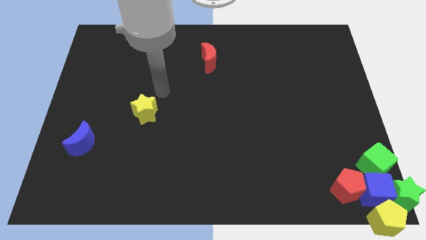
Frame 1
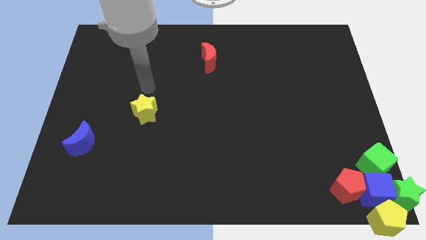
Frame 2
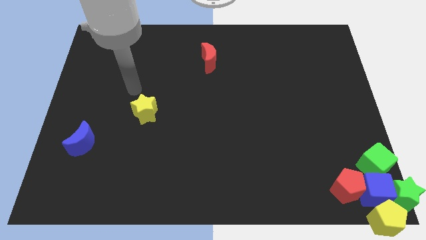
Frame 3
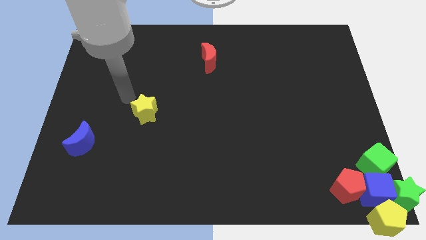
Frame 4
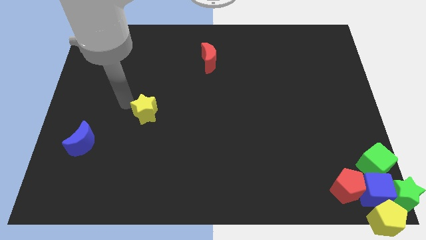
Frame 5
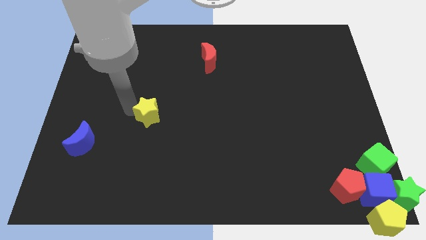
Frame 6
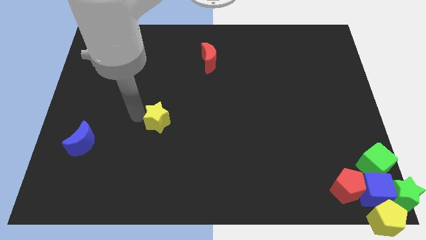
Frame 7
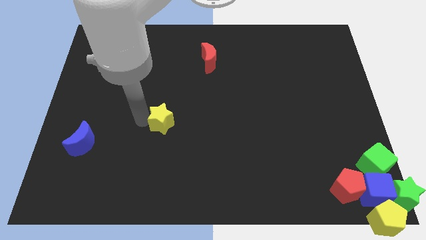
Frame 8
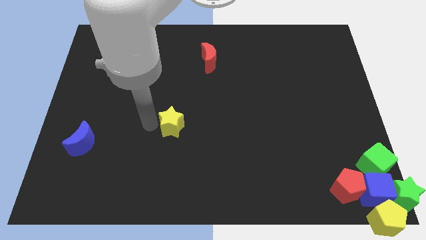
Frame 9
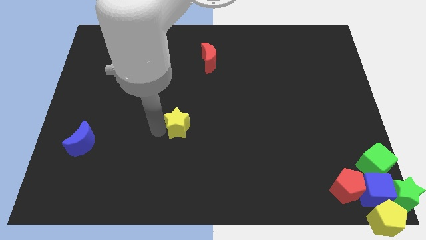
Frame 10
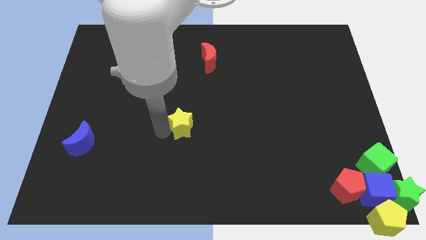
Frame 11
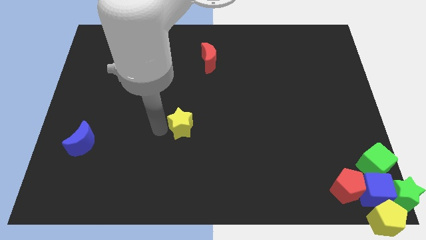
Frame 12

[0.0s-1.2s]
move the yellow star to the right of the board

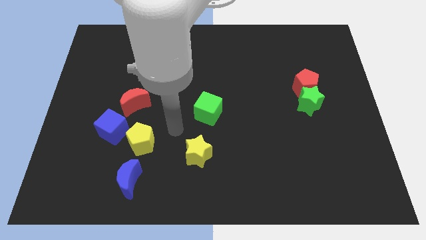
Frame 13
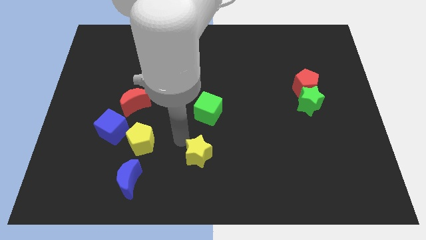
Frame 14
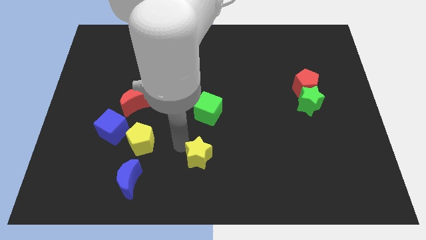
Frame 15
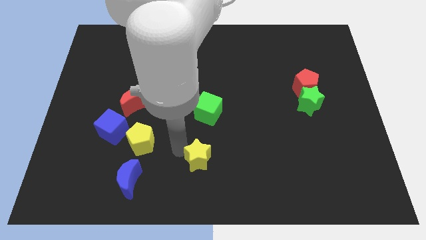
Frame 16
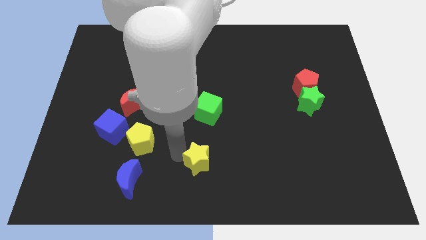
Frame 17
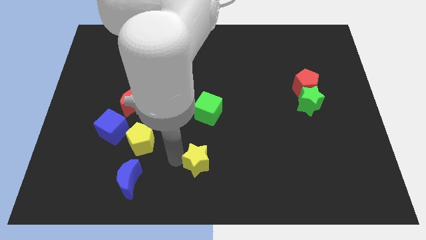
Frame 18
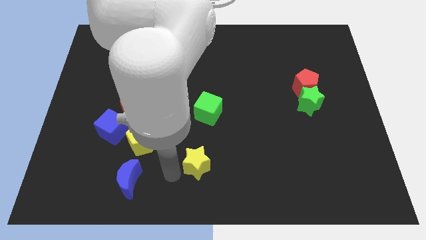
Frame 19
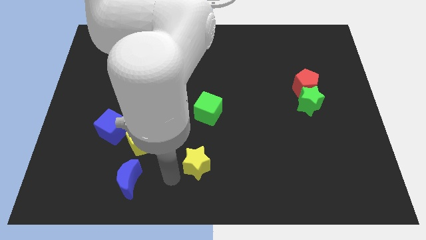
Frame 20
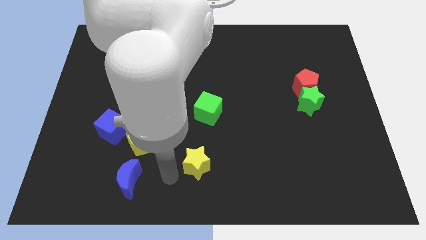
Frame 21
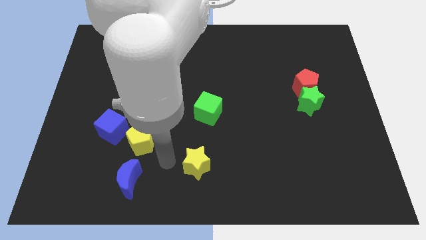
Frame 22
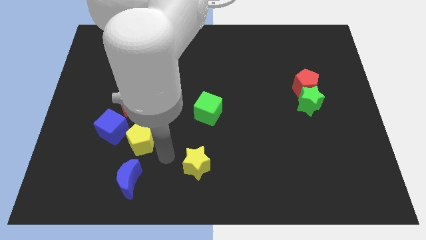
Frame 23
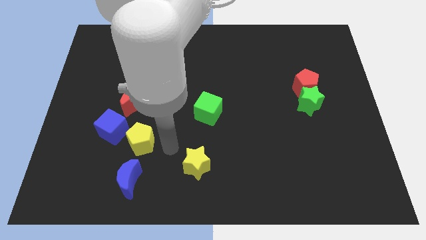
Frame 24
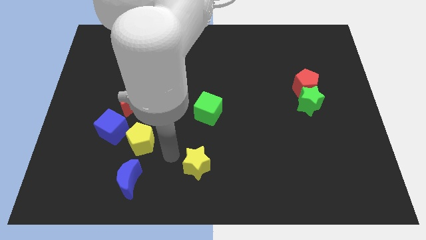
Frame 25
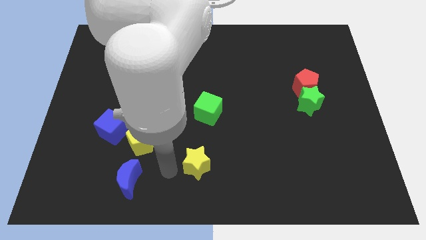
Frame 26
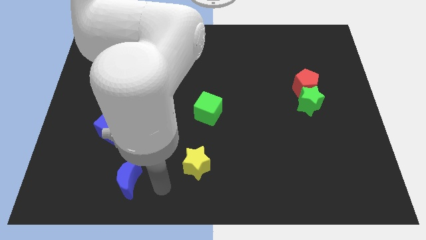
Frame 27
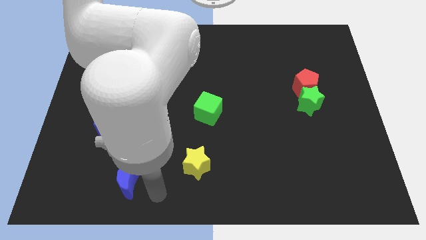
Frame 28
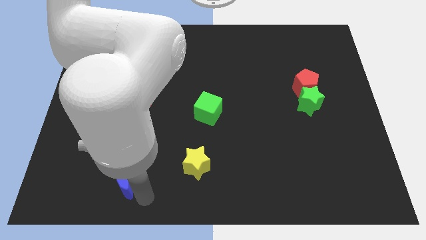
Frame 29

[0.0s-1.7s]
move your arm near blue moon

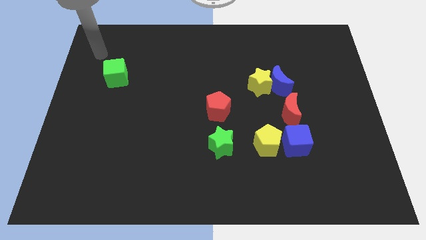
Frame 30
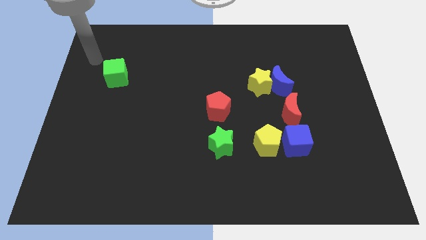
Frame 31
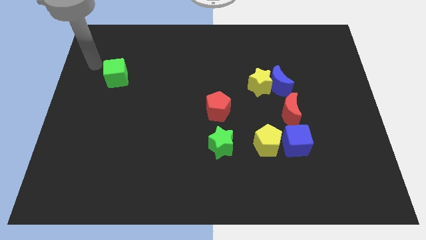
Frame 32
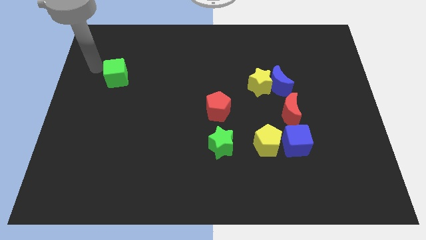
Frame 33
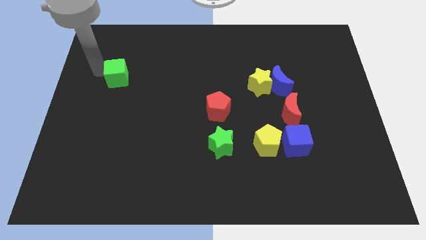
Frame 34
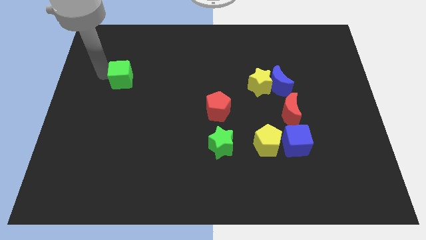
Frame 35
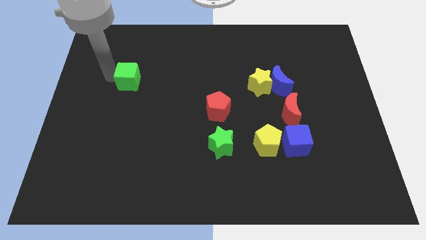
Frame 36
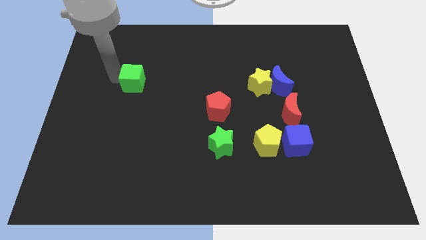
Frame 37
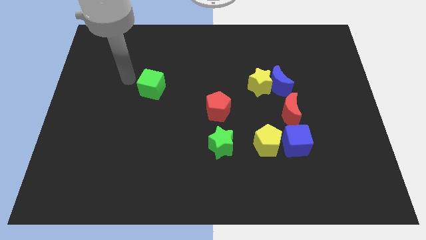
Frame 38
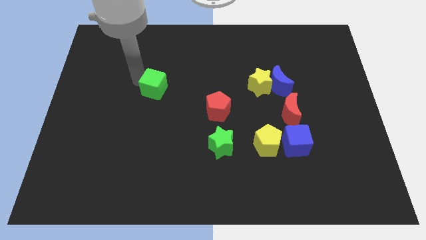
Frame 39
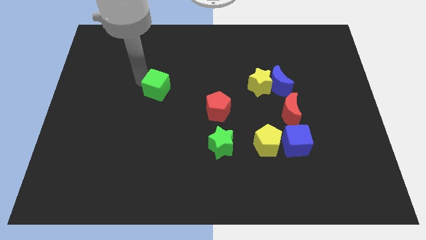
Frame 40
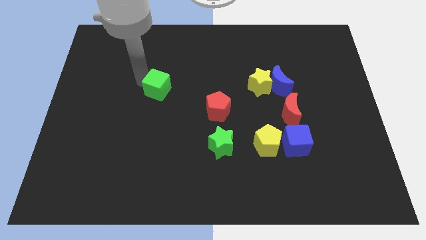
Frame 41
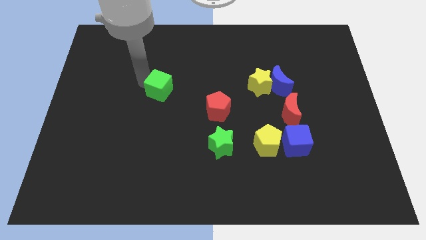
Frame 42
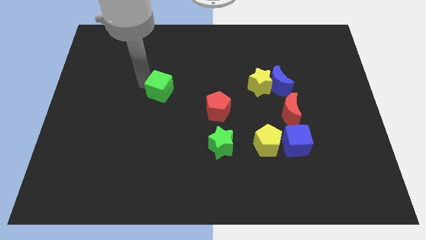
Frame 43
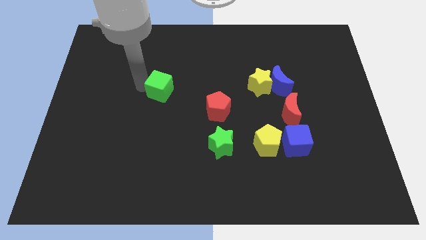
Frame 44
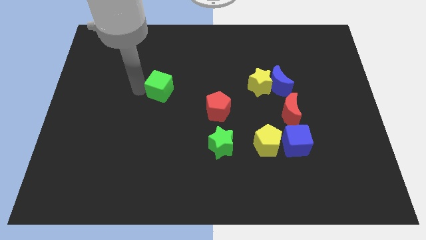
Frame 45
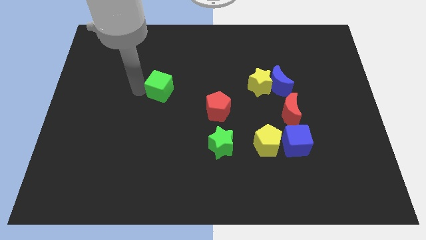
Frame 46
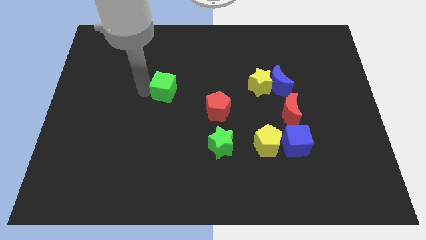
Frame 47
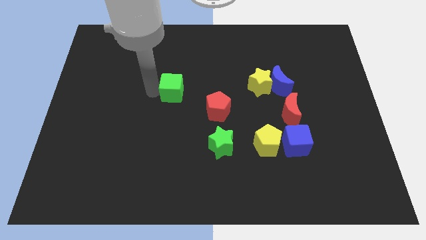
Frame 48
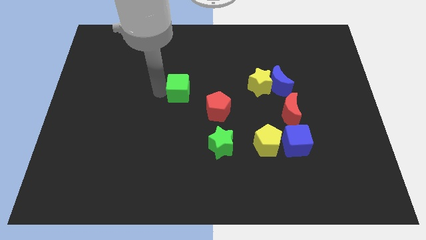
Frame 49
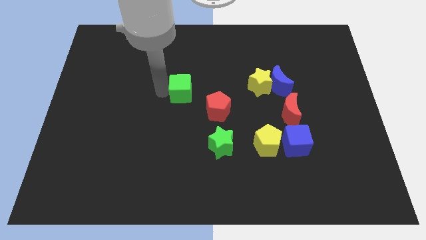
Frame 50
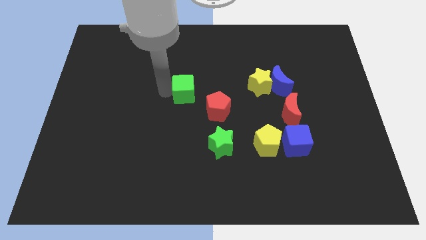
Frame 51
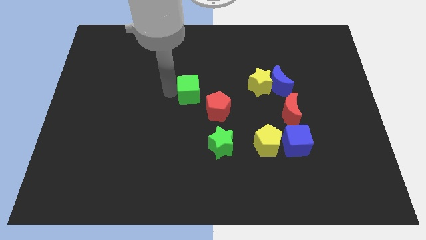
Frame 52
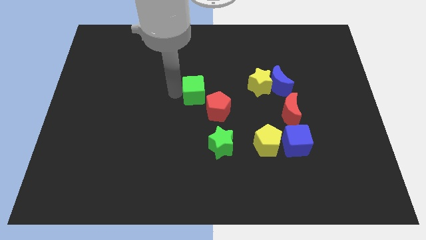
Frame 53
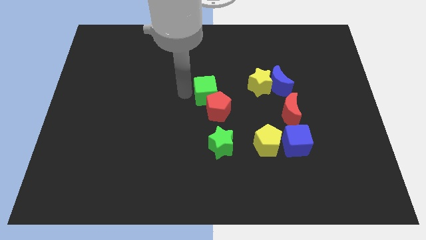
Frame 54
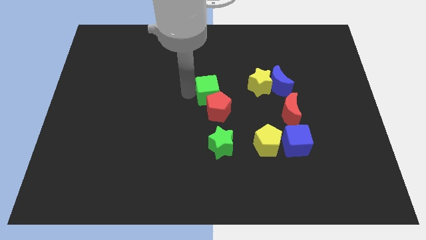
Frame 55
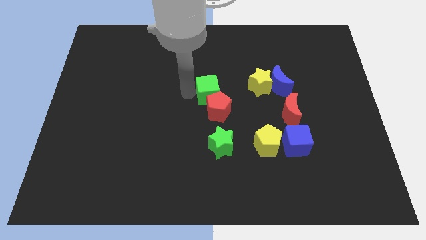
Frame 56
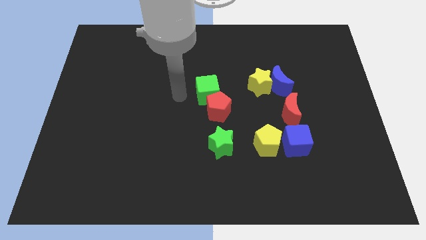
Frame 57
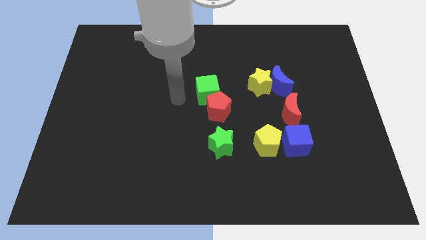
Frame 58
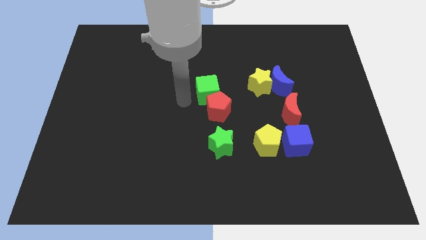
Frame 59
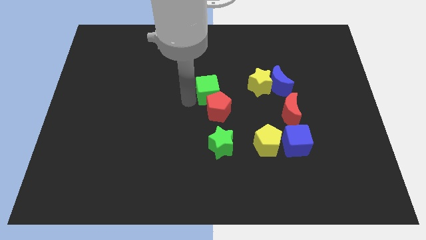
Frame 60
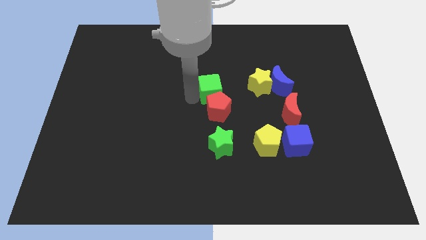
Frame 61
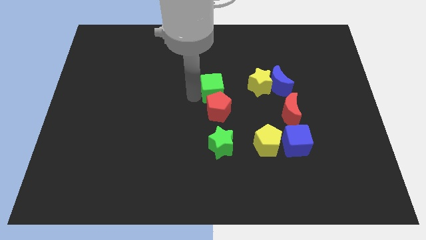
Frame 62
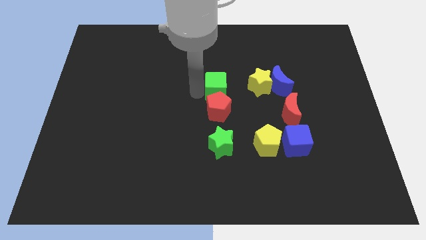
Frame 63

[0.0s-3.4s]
place a green cube on top of the red pentagon

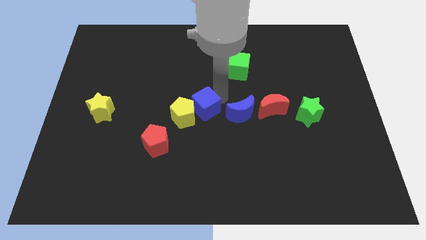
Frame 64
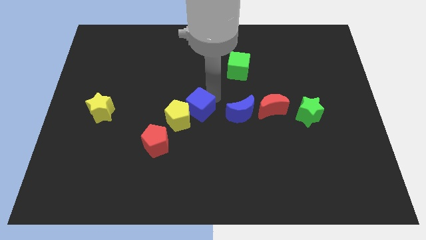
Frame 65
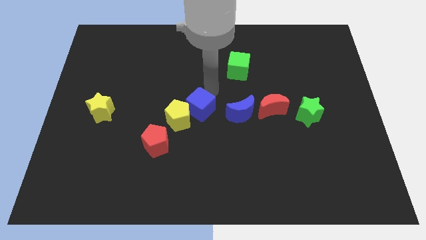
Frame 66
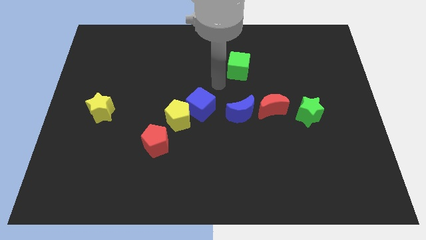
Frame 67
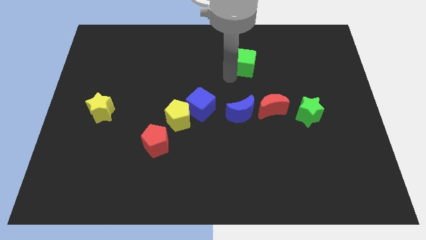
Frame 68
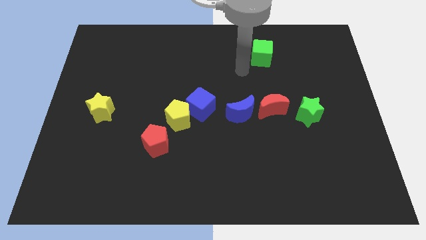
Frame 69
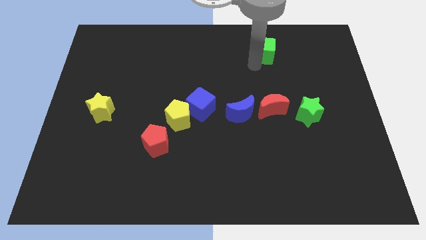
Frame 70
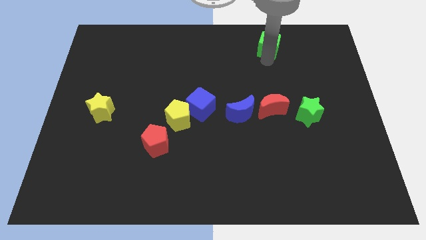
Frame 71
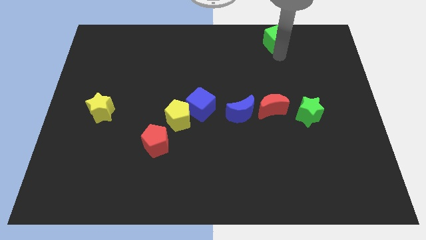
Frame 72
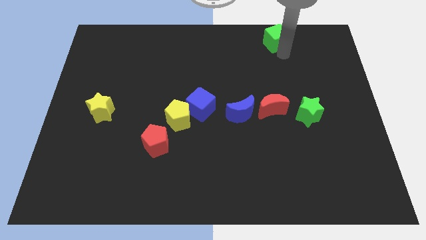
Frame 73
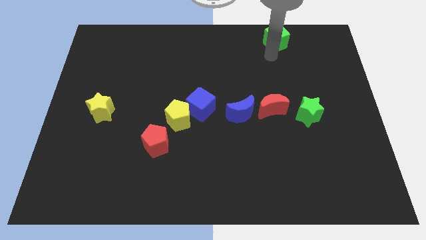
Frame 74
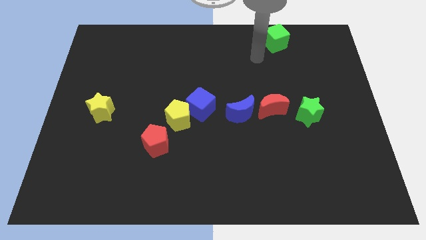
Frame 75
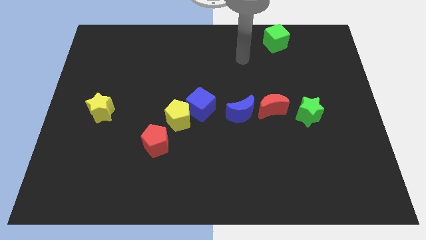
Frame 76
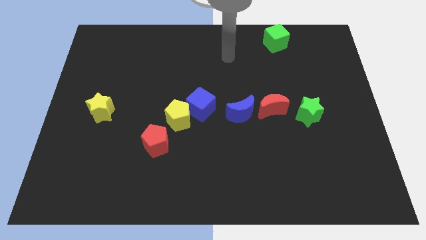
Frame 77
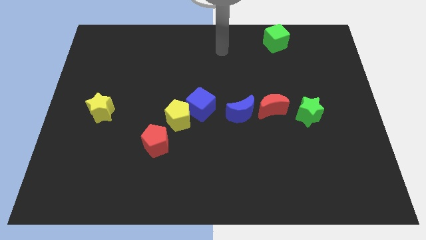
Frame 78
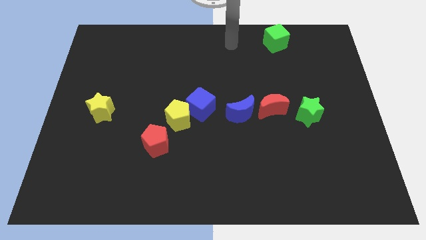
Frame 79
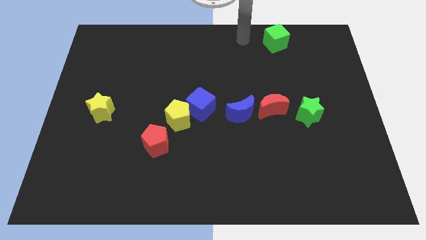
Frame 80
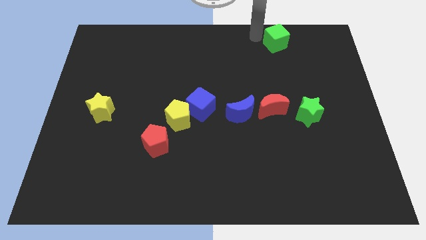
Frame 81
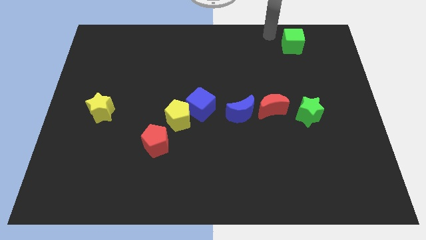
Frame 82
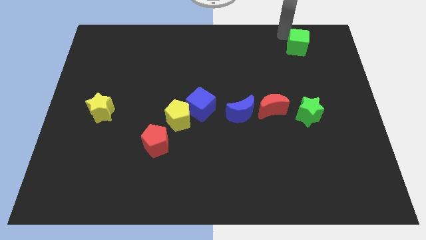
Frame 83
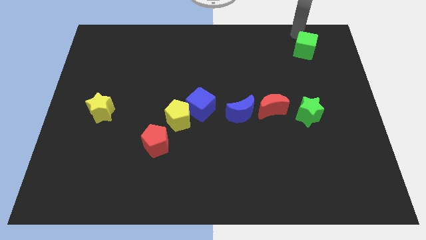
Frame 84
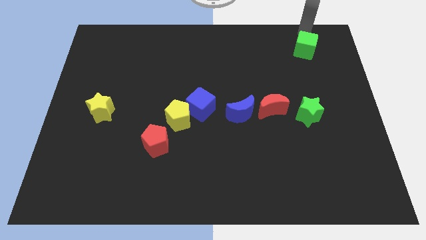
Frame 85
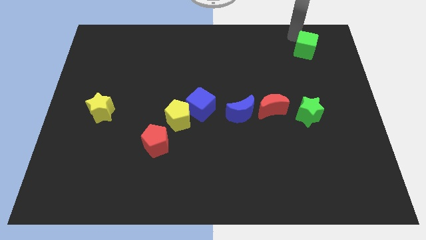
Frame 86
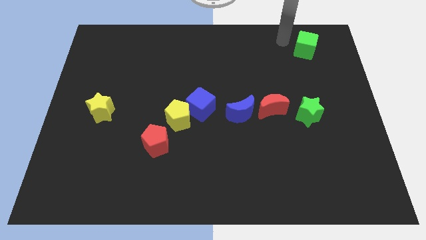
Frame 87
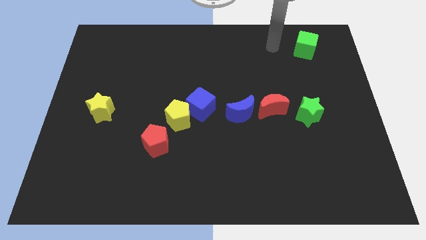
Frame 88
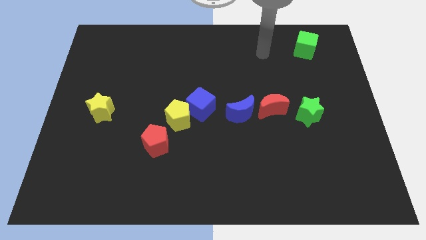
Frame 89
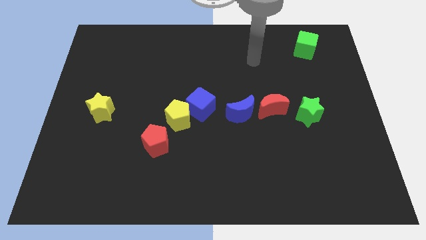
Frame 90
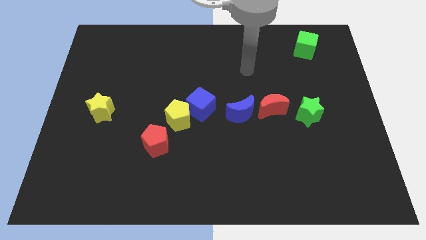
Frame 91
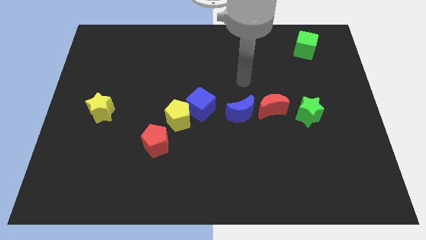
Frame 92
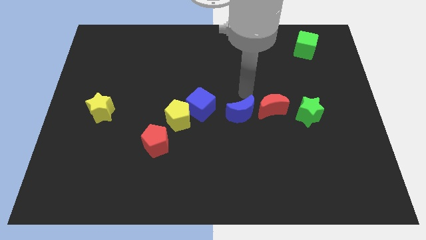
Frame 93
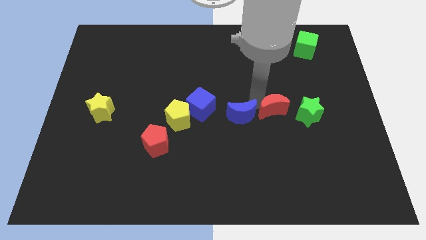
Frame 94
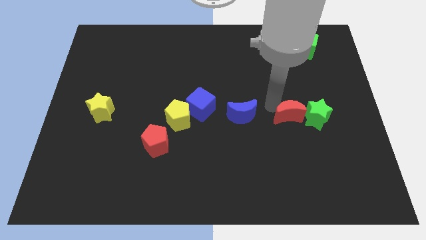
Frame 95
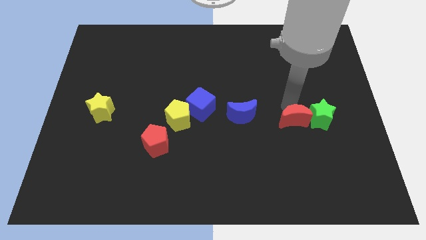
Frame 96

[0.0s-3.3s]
push green cube towards the top right corner of the board
